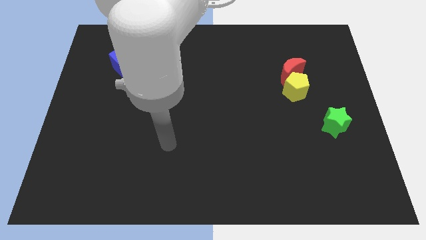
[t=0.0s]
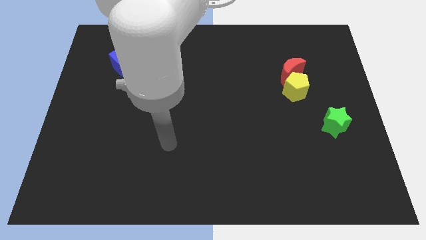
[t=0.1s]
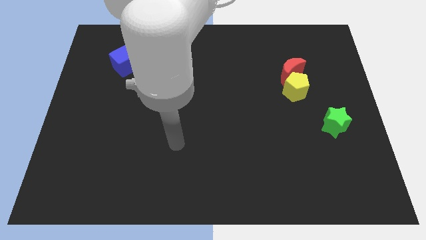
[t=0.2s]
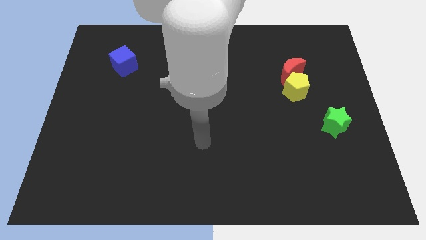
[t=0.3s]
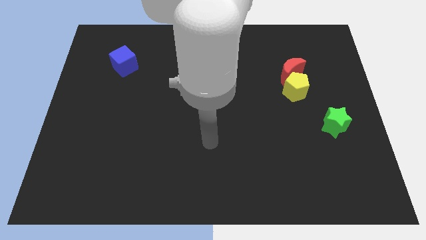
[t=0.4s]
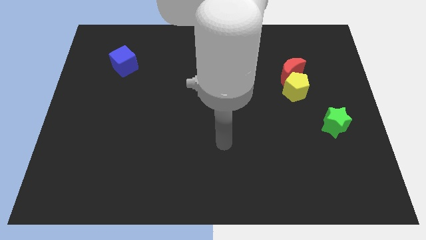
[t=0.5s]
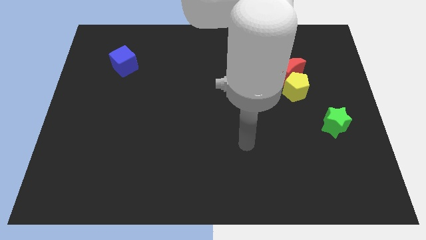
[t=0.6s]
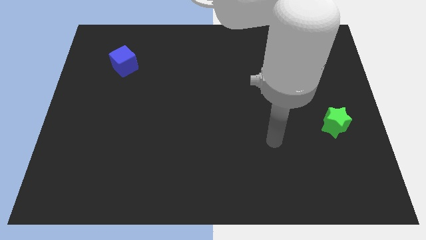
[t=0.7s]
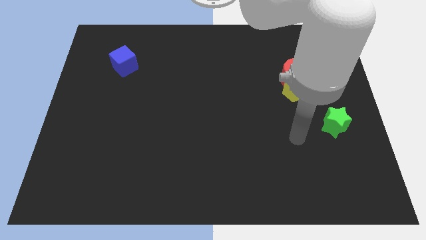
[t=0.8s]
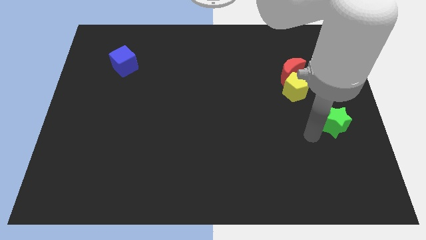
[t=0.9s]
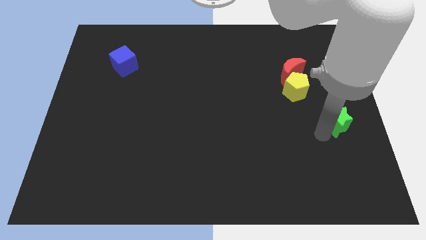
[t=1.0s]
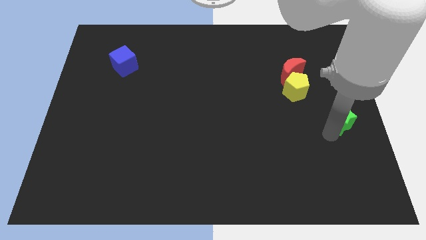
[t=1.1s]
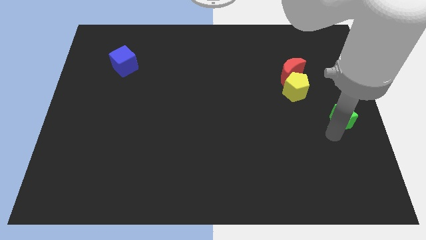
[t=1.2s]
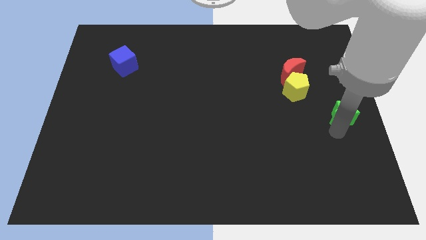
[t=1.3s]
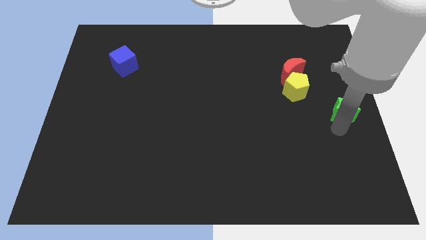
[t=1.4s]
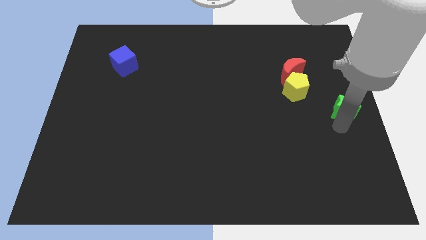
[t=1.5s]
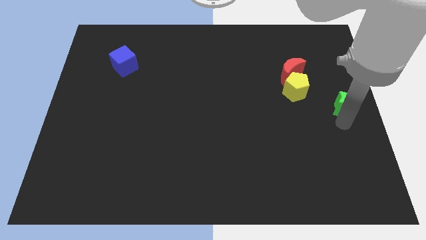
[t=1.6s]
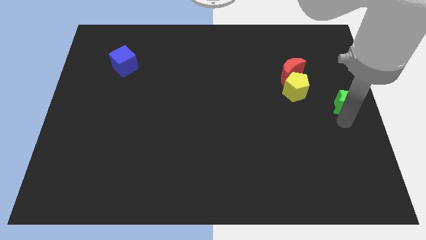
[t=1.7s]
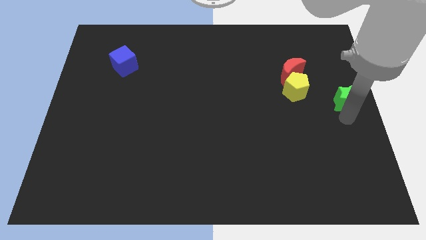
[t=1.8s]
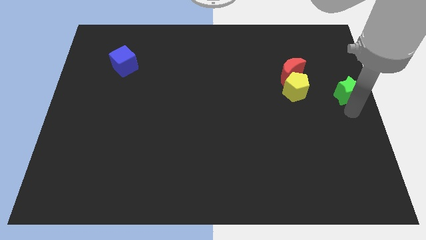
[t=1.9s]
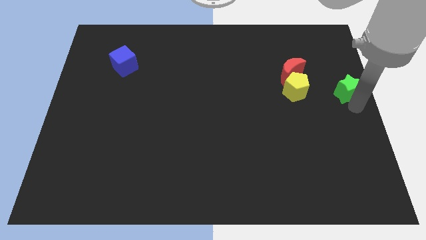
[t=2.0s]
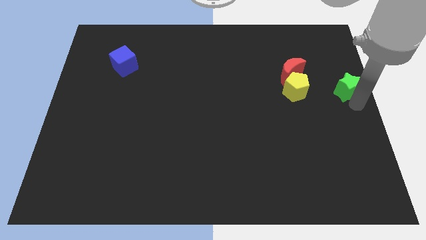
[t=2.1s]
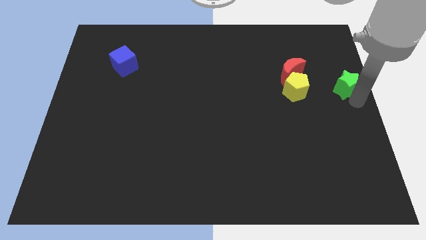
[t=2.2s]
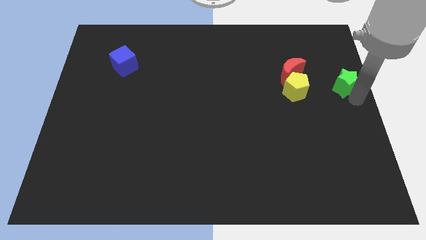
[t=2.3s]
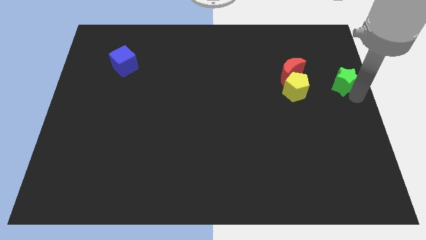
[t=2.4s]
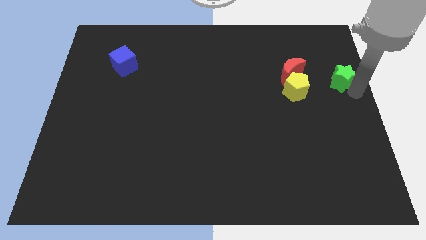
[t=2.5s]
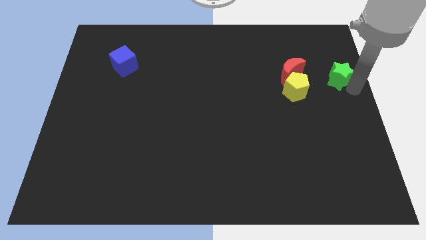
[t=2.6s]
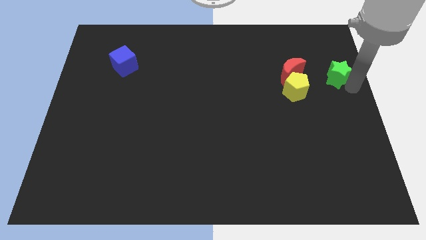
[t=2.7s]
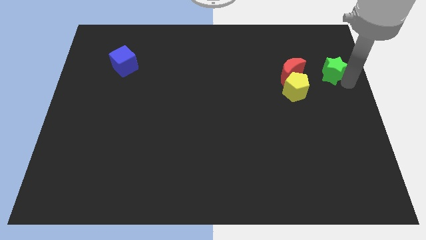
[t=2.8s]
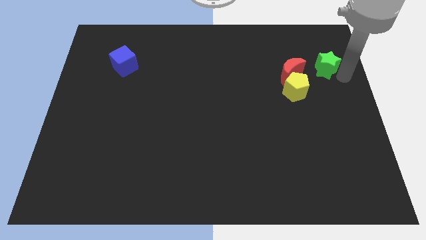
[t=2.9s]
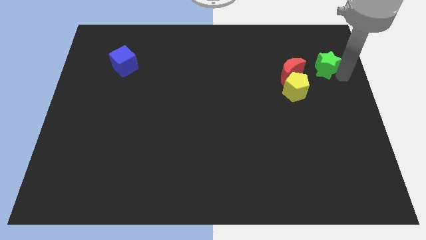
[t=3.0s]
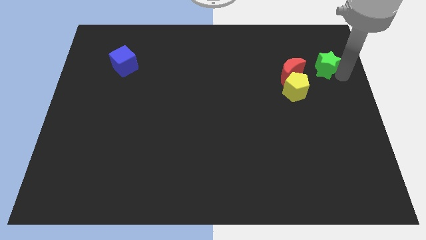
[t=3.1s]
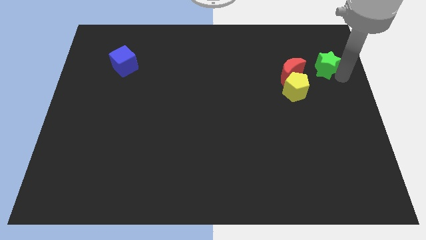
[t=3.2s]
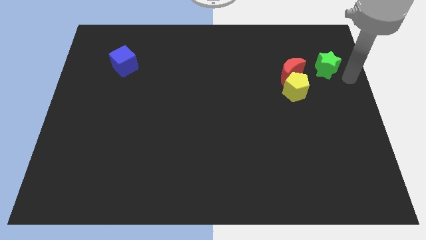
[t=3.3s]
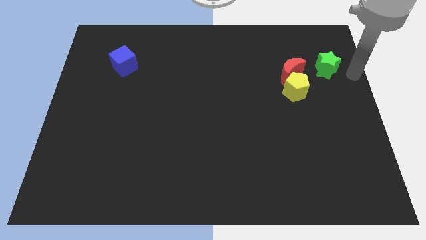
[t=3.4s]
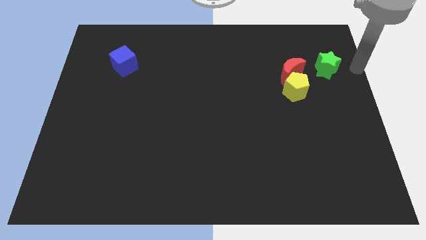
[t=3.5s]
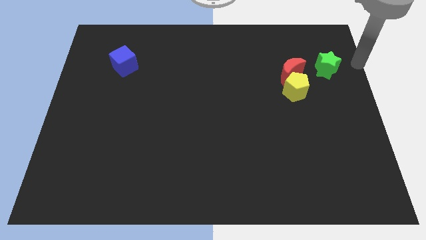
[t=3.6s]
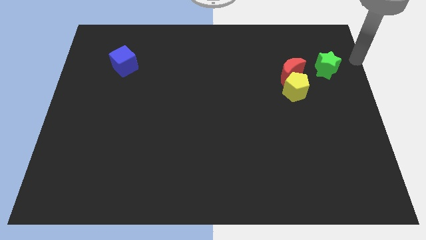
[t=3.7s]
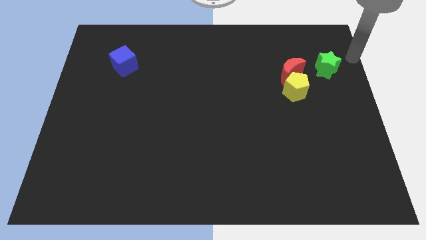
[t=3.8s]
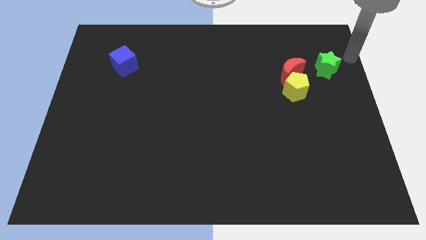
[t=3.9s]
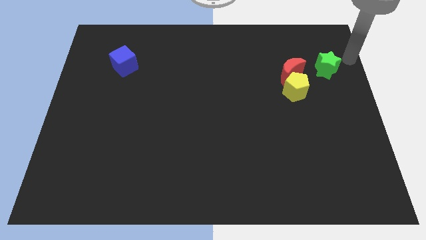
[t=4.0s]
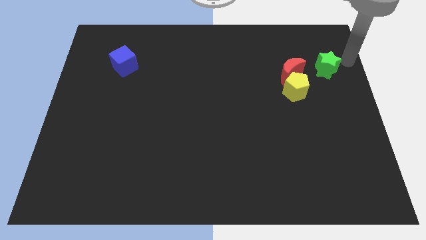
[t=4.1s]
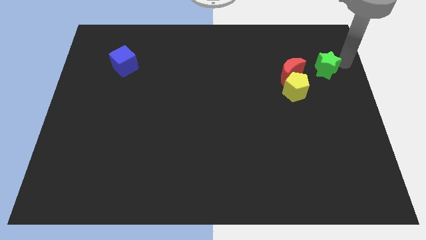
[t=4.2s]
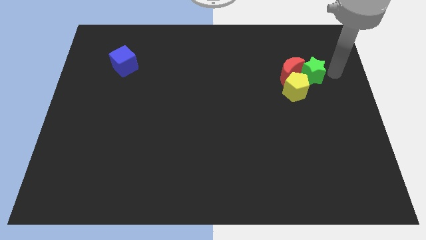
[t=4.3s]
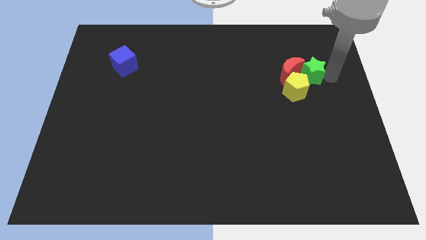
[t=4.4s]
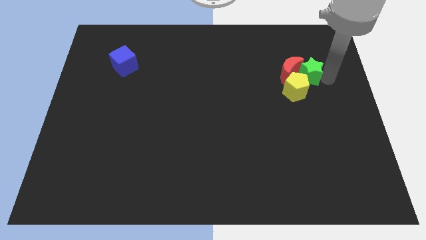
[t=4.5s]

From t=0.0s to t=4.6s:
push the green star to the red moon

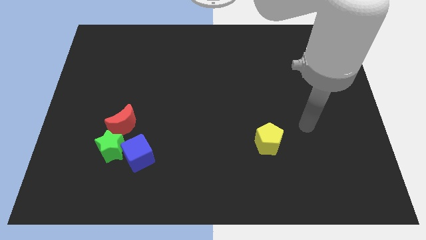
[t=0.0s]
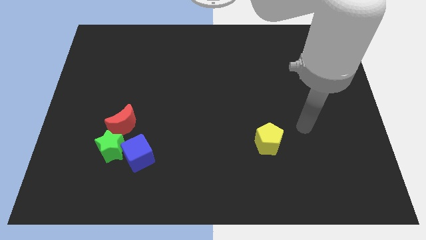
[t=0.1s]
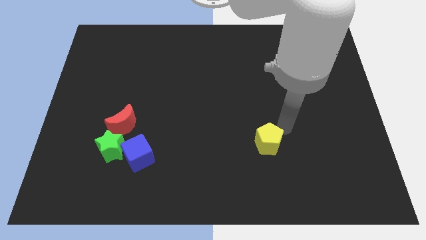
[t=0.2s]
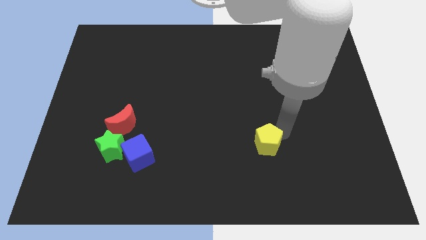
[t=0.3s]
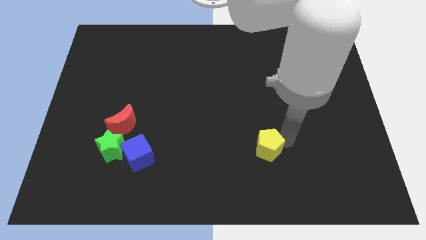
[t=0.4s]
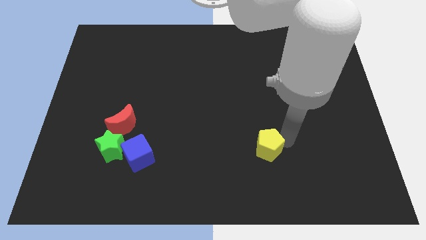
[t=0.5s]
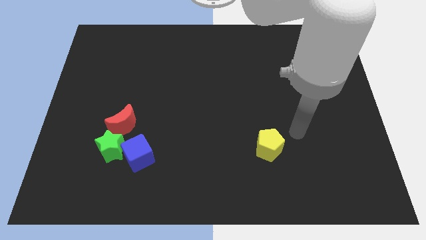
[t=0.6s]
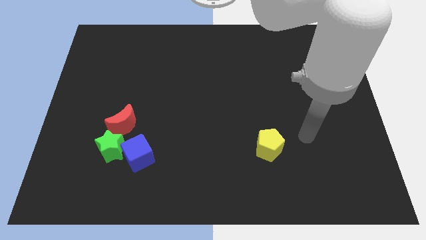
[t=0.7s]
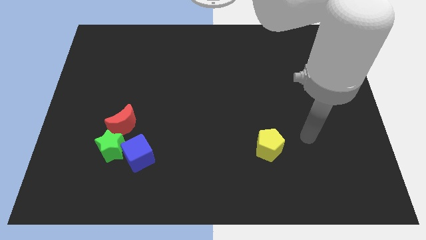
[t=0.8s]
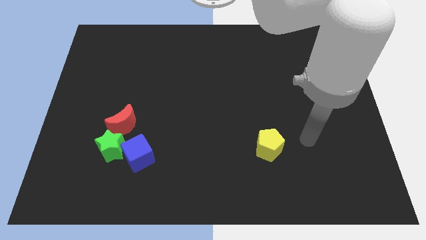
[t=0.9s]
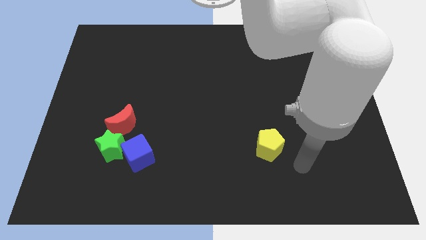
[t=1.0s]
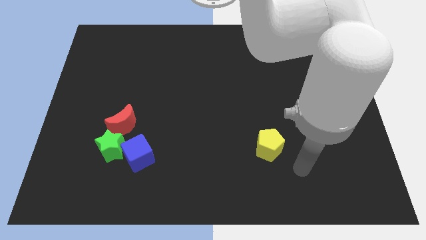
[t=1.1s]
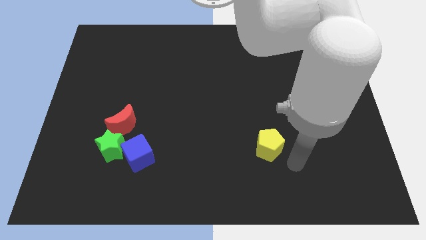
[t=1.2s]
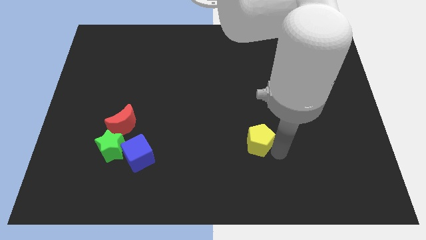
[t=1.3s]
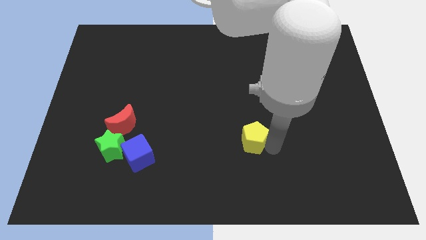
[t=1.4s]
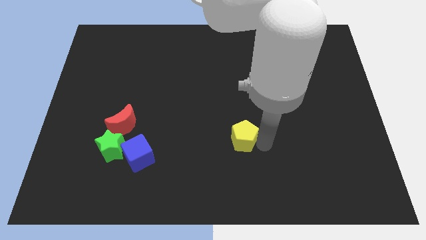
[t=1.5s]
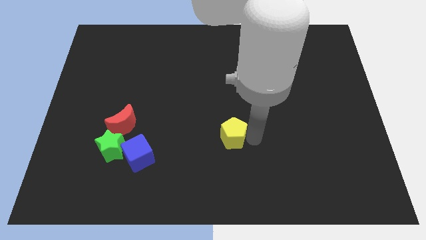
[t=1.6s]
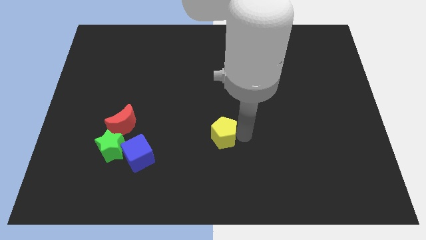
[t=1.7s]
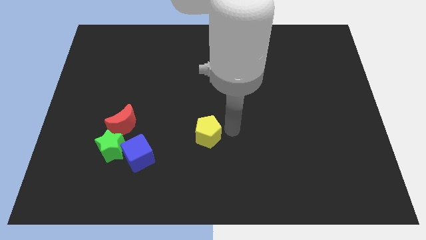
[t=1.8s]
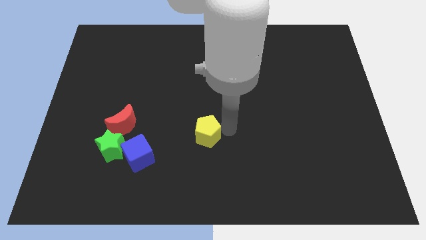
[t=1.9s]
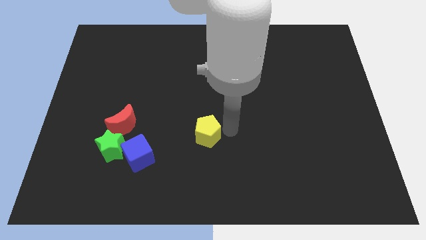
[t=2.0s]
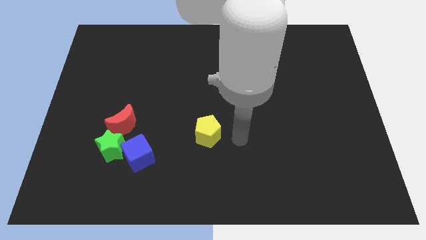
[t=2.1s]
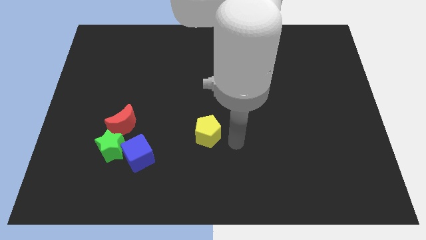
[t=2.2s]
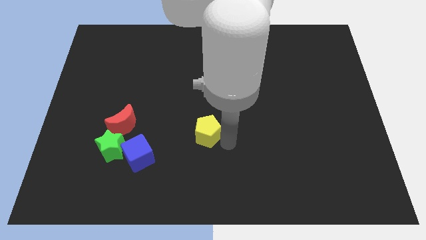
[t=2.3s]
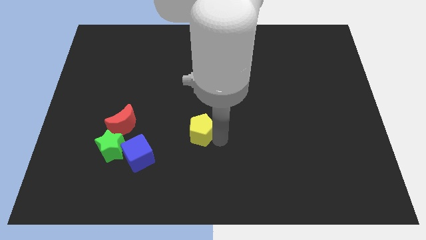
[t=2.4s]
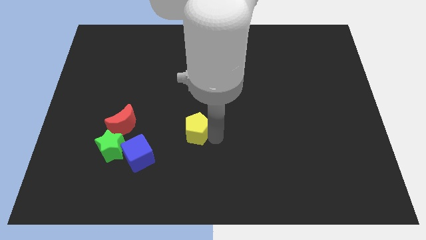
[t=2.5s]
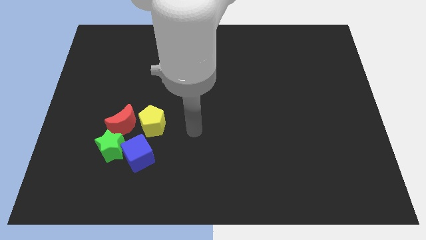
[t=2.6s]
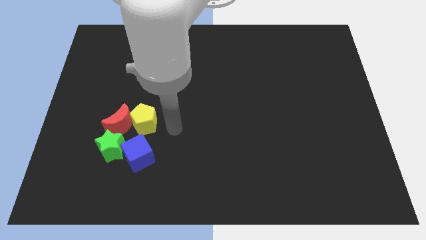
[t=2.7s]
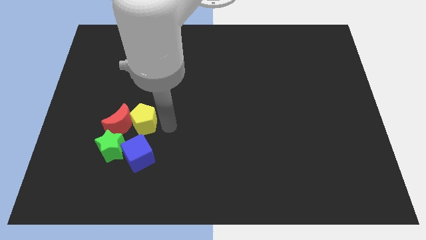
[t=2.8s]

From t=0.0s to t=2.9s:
put the yellow pentagon close to the moon

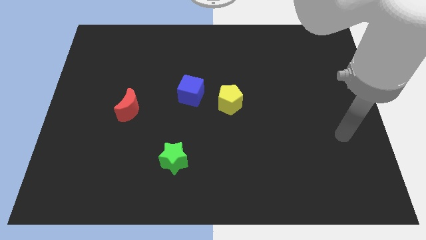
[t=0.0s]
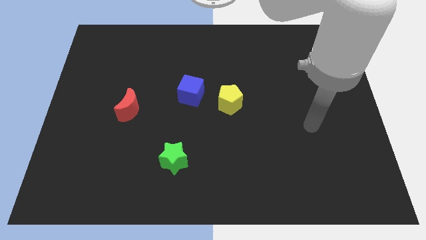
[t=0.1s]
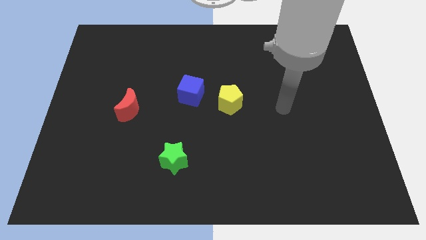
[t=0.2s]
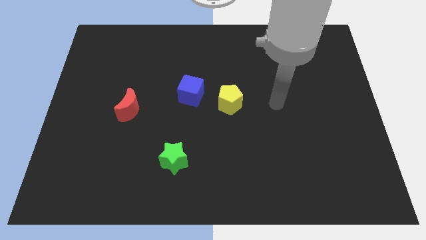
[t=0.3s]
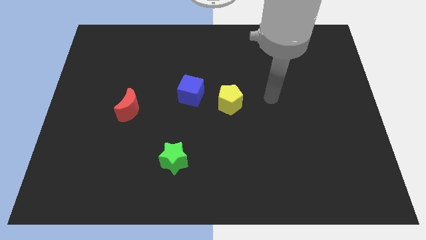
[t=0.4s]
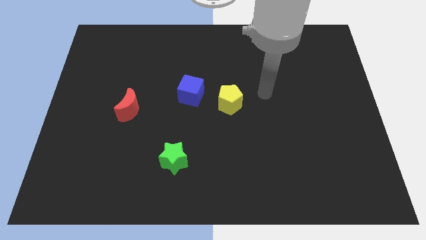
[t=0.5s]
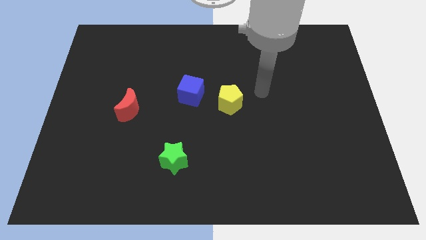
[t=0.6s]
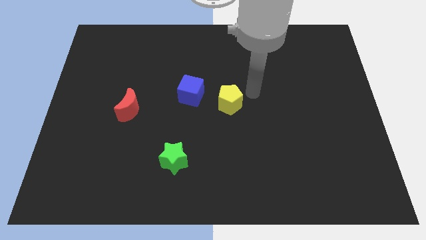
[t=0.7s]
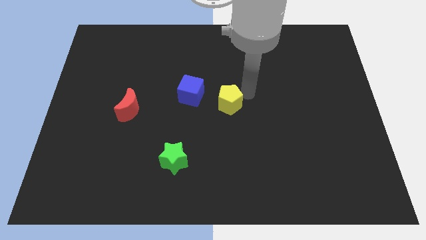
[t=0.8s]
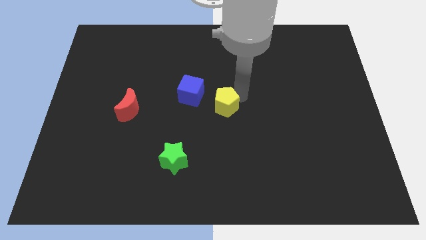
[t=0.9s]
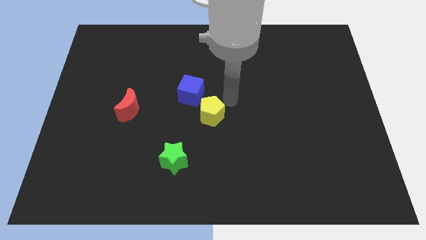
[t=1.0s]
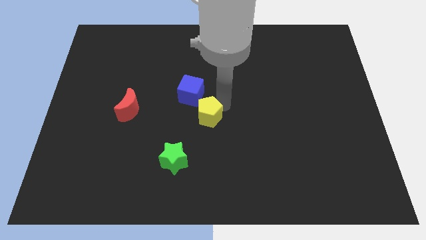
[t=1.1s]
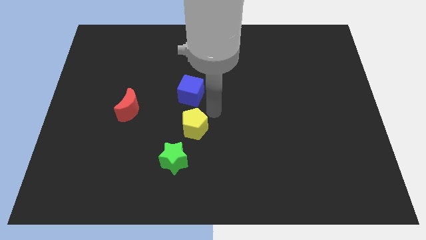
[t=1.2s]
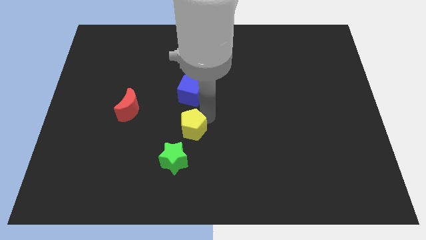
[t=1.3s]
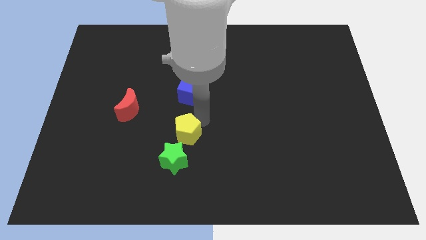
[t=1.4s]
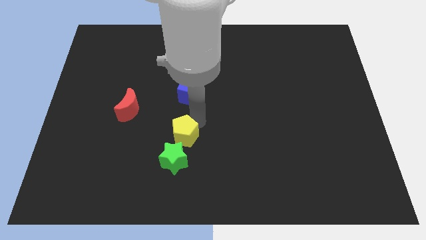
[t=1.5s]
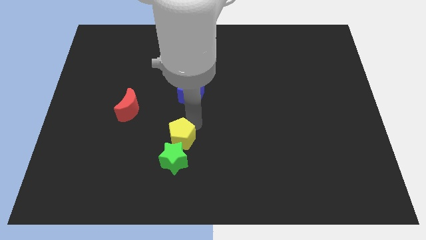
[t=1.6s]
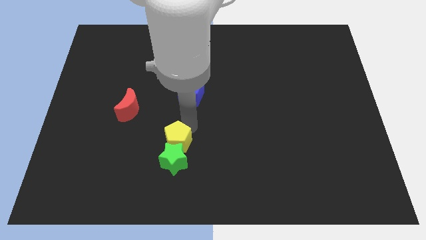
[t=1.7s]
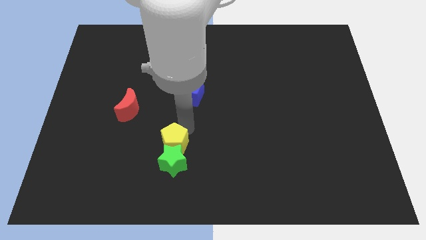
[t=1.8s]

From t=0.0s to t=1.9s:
put the yellow pentagon to the green star
